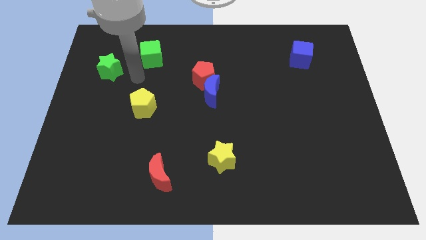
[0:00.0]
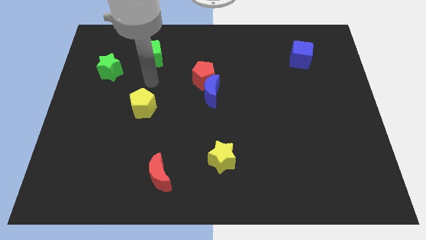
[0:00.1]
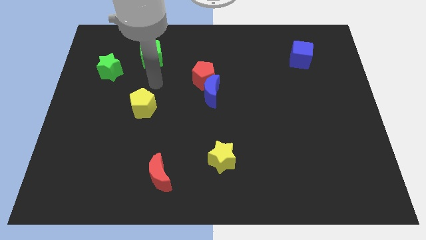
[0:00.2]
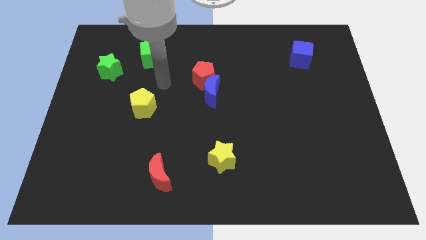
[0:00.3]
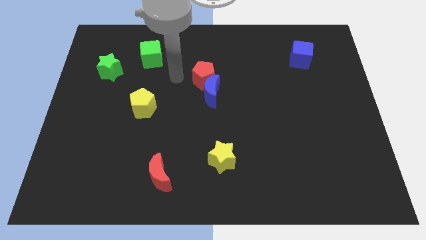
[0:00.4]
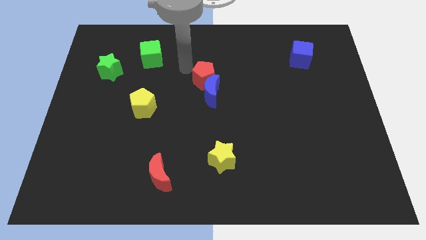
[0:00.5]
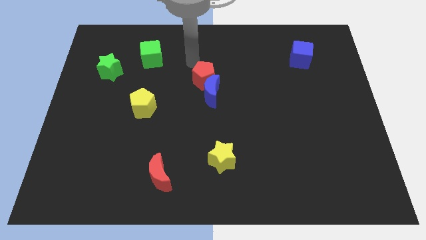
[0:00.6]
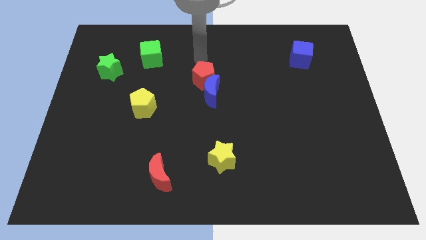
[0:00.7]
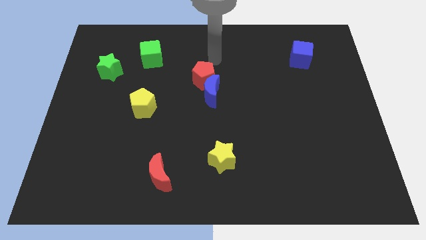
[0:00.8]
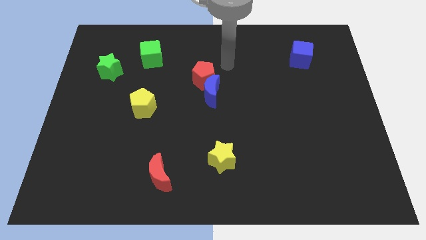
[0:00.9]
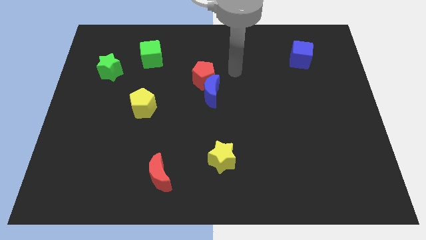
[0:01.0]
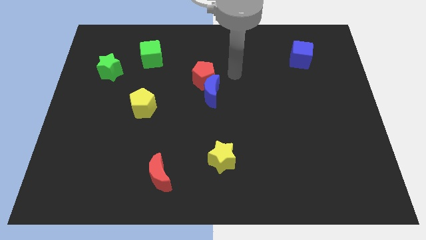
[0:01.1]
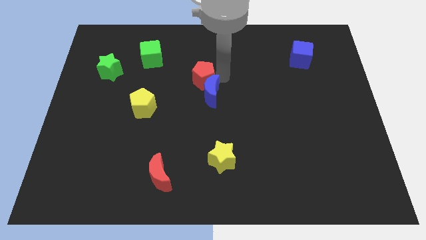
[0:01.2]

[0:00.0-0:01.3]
place the arm right to the red pentagon

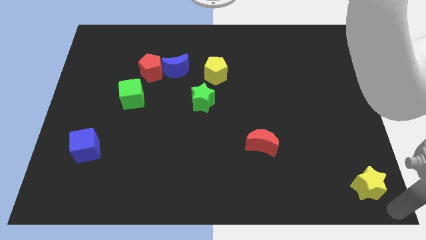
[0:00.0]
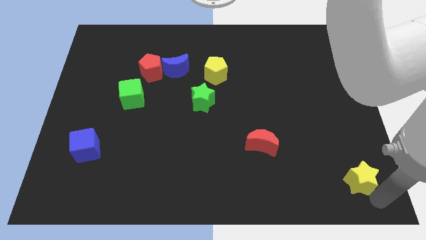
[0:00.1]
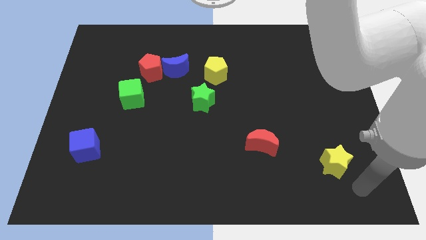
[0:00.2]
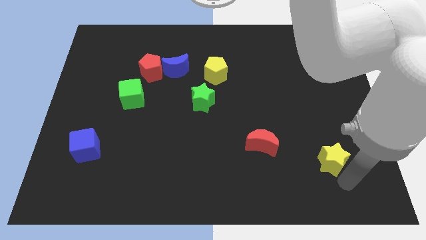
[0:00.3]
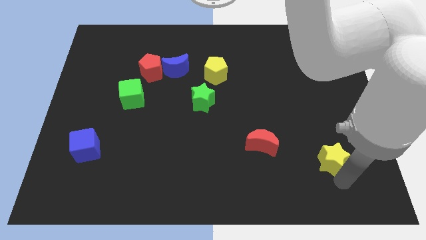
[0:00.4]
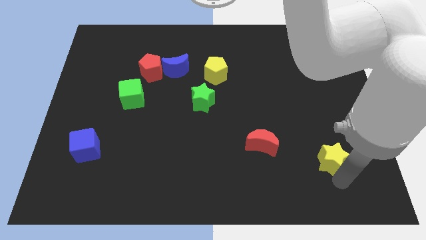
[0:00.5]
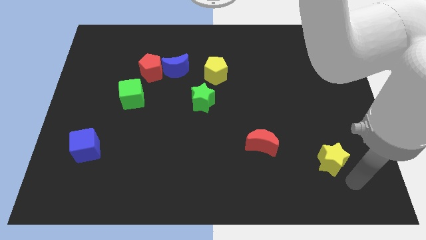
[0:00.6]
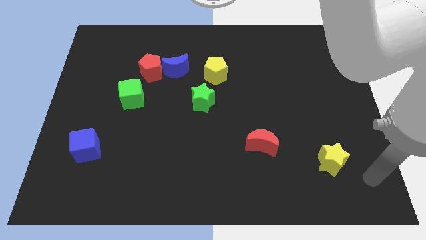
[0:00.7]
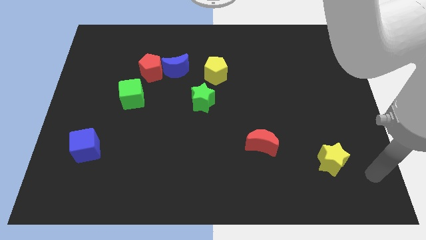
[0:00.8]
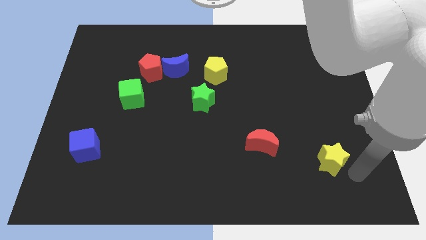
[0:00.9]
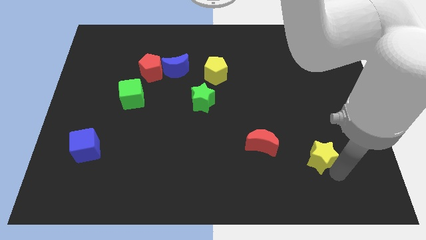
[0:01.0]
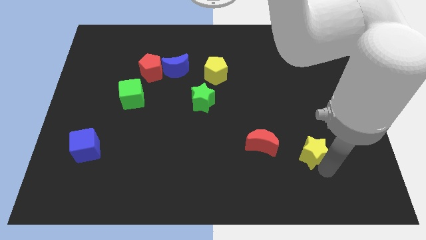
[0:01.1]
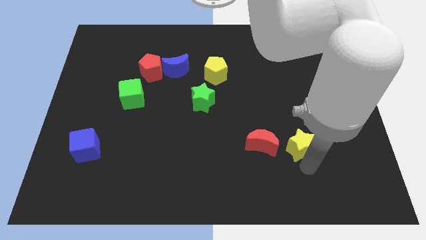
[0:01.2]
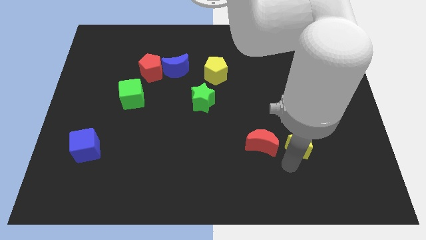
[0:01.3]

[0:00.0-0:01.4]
place the yellow star to the right side of the red moon

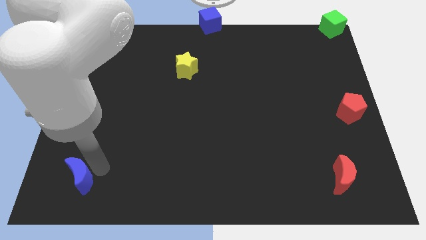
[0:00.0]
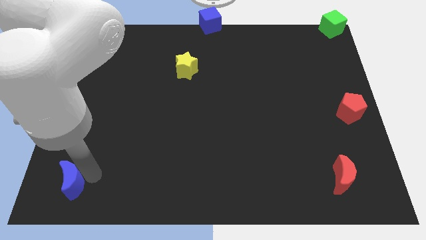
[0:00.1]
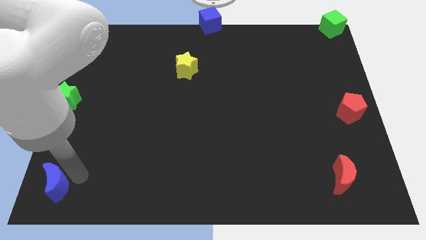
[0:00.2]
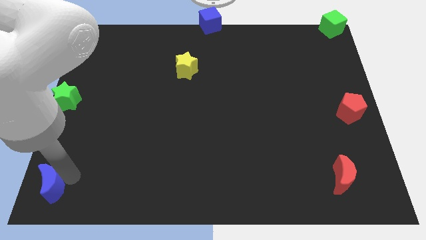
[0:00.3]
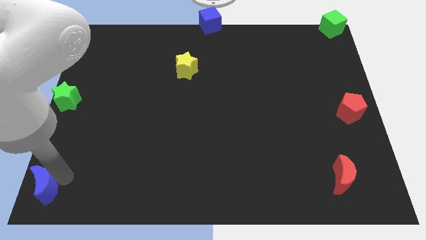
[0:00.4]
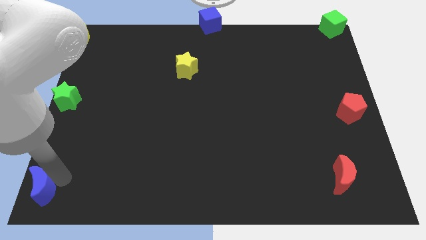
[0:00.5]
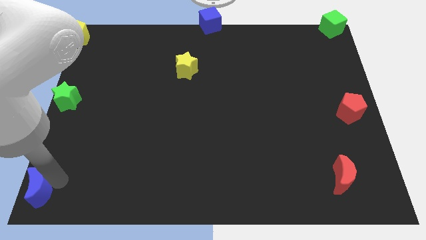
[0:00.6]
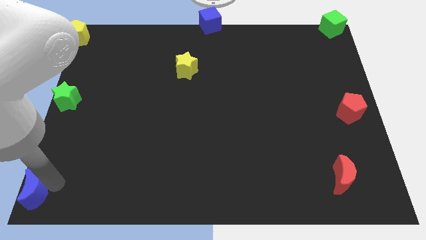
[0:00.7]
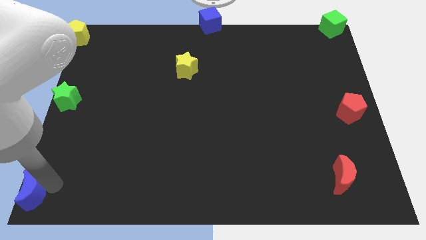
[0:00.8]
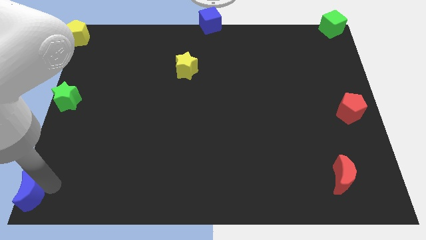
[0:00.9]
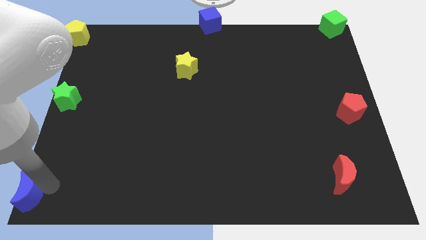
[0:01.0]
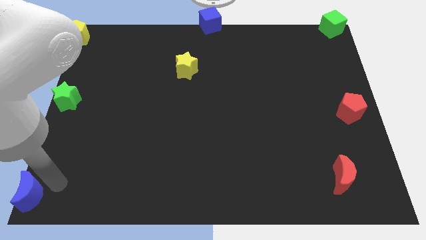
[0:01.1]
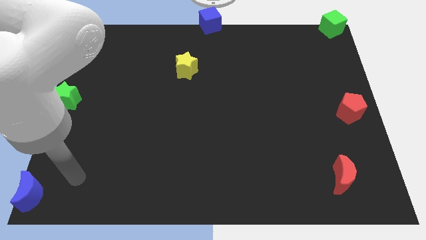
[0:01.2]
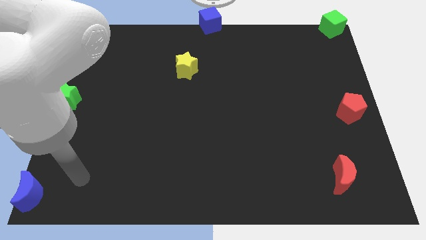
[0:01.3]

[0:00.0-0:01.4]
move the blue crescent to the left bottom of the board

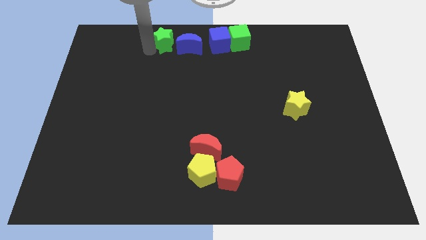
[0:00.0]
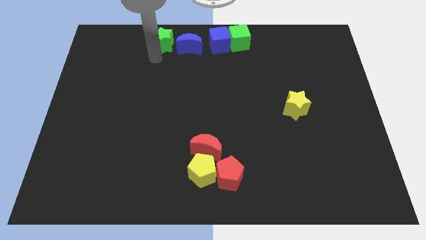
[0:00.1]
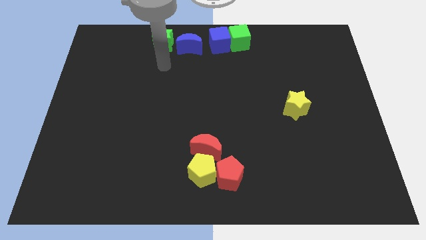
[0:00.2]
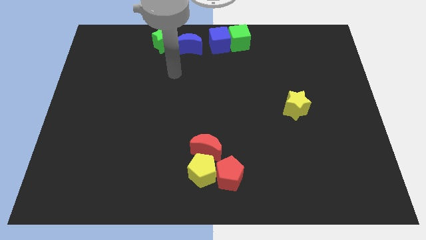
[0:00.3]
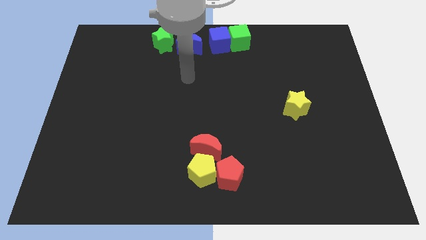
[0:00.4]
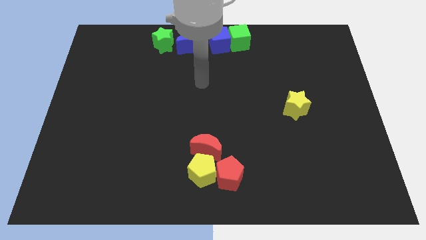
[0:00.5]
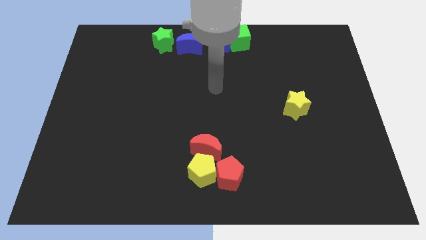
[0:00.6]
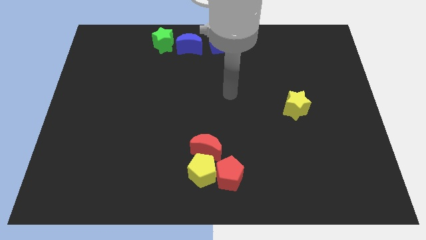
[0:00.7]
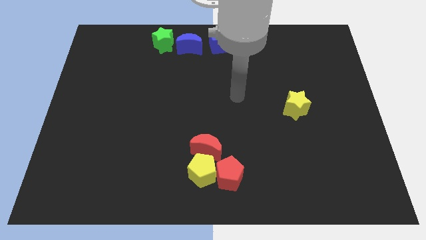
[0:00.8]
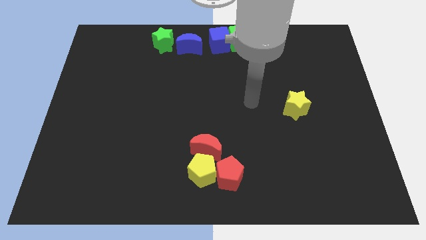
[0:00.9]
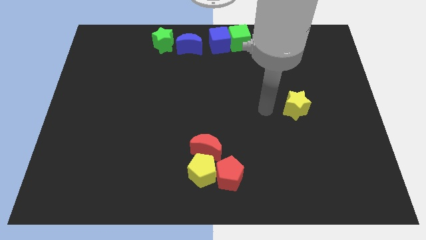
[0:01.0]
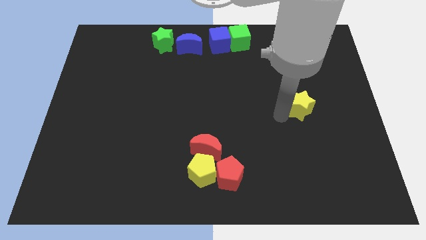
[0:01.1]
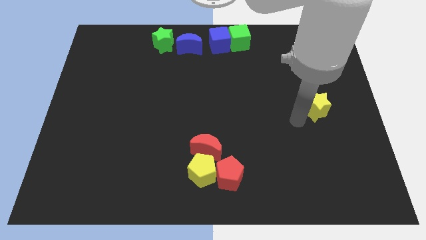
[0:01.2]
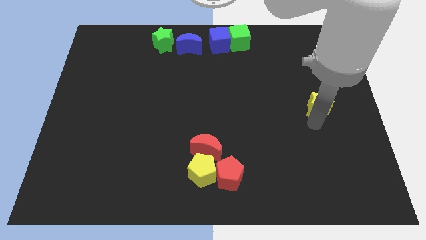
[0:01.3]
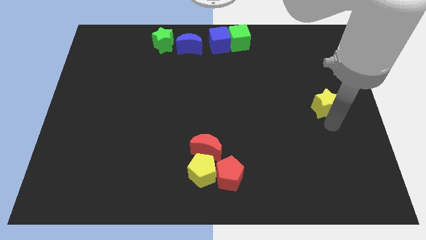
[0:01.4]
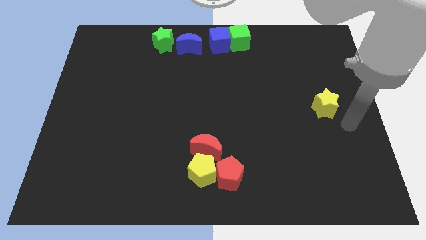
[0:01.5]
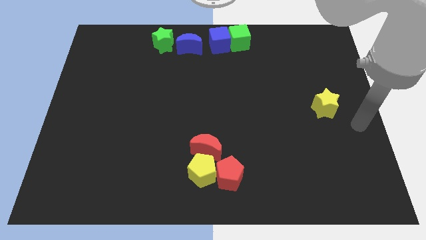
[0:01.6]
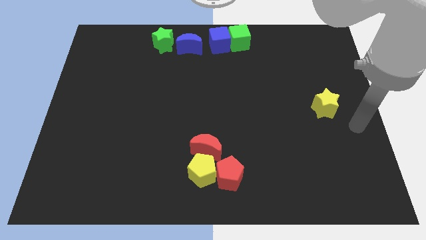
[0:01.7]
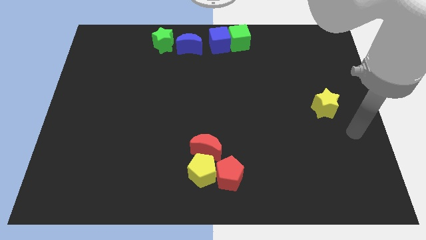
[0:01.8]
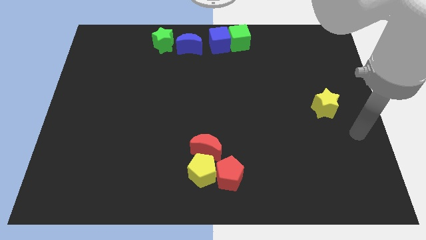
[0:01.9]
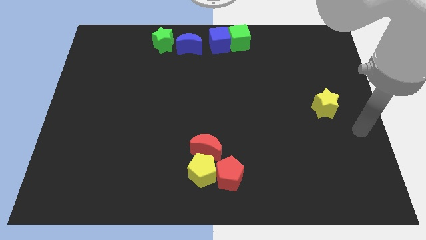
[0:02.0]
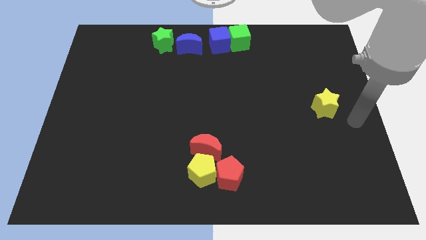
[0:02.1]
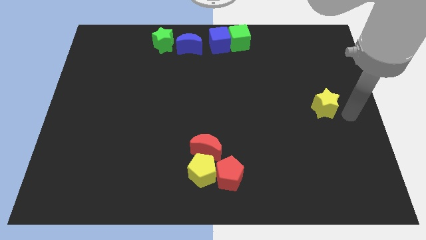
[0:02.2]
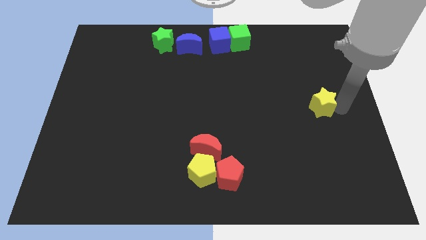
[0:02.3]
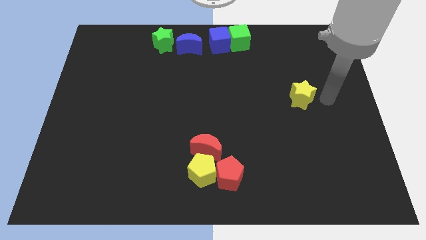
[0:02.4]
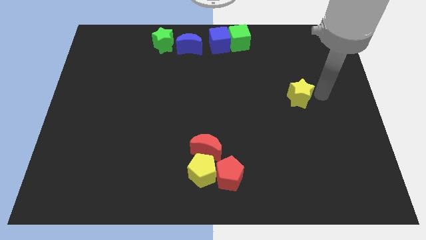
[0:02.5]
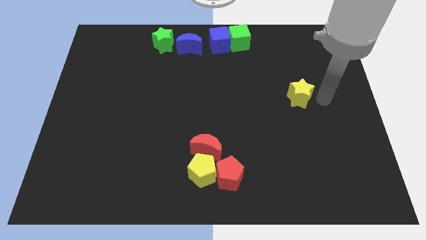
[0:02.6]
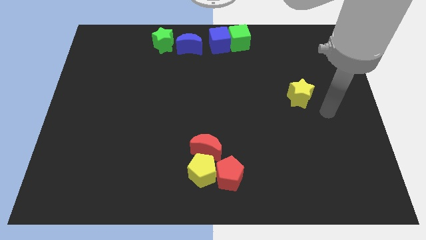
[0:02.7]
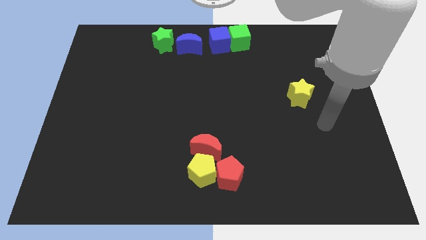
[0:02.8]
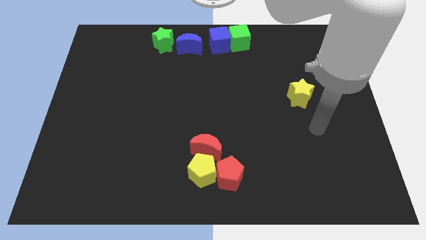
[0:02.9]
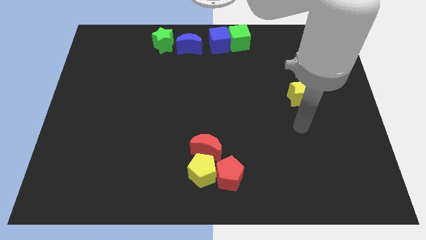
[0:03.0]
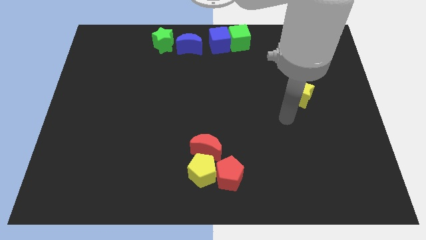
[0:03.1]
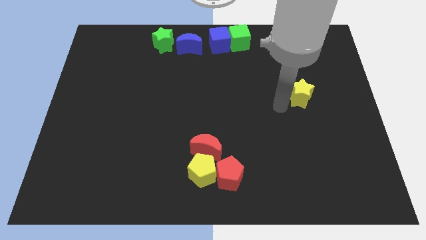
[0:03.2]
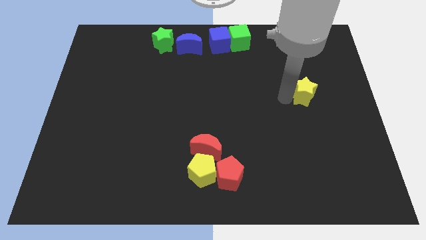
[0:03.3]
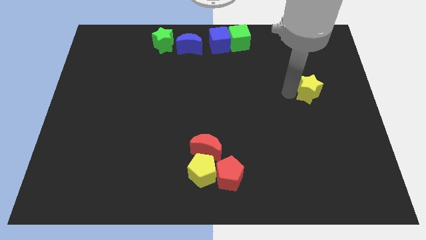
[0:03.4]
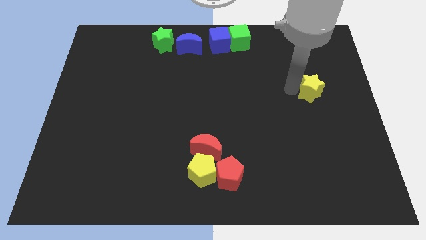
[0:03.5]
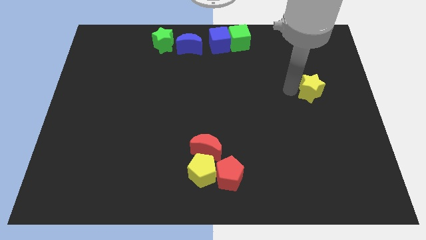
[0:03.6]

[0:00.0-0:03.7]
push the yellow star to the right side of the table

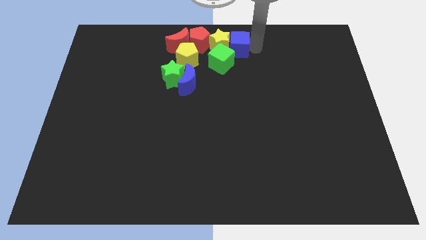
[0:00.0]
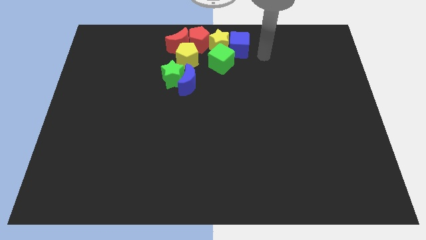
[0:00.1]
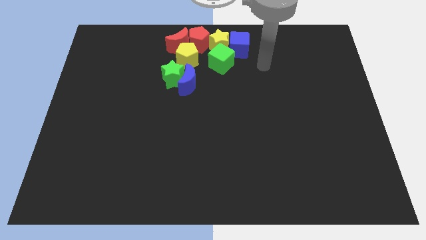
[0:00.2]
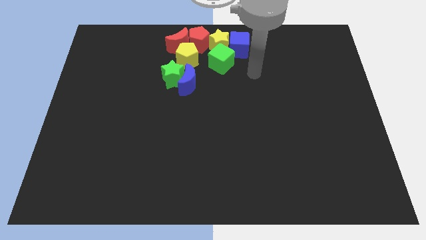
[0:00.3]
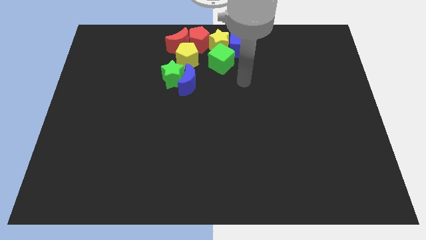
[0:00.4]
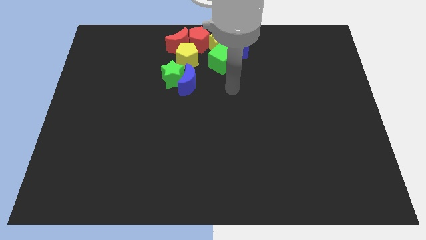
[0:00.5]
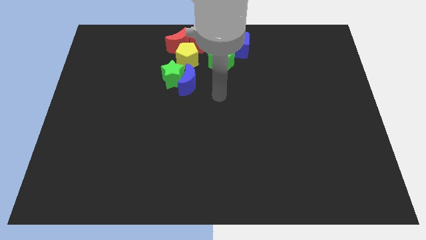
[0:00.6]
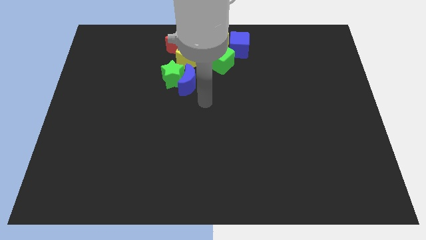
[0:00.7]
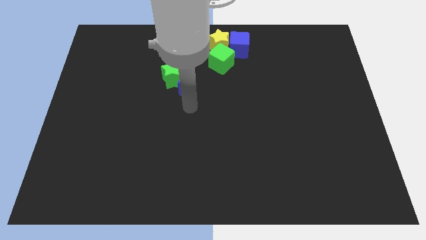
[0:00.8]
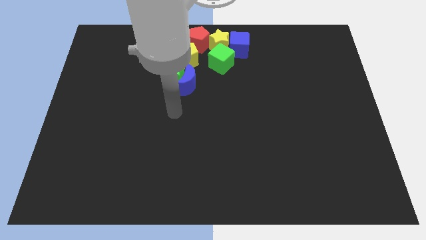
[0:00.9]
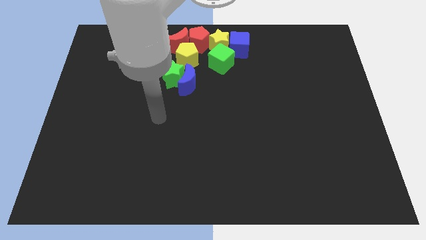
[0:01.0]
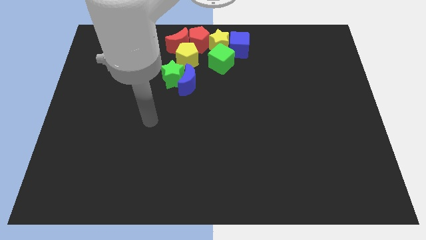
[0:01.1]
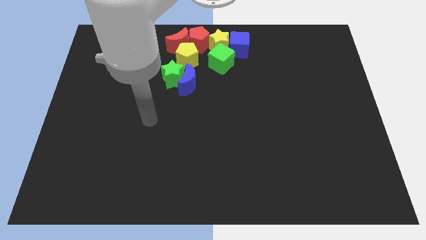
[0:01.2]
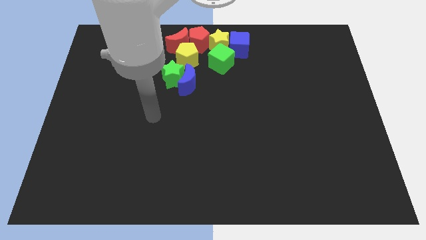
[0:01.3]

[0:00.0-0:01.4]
move your arm away from the blue cube
